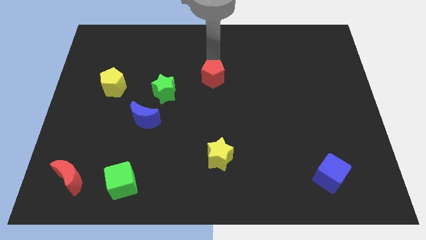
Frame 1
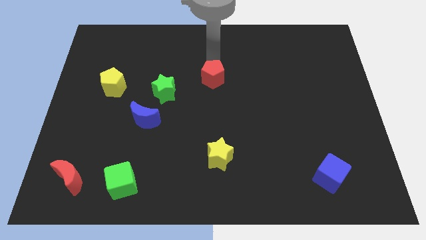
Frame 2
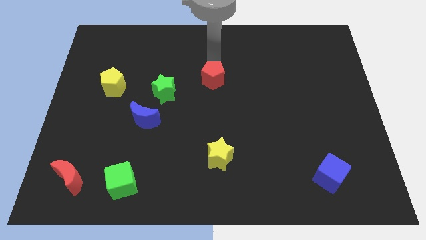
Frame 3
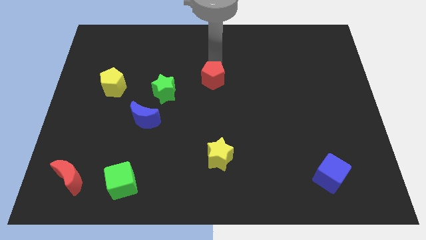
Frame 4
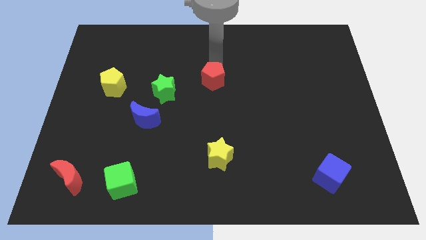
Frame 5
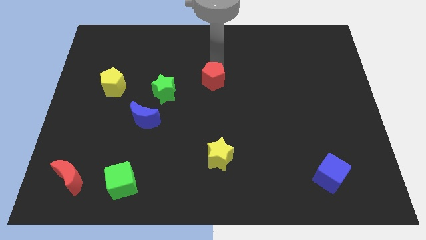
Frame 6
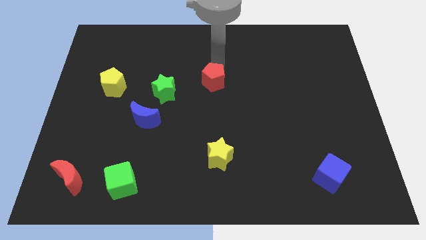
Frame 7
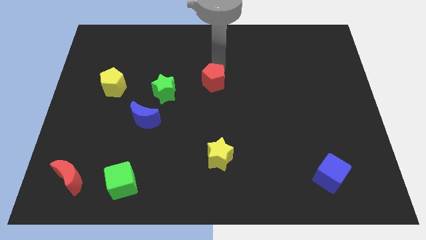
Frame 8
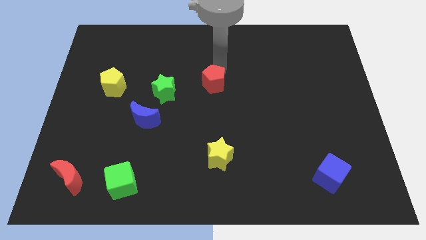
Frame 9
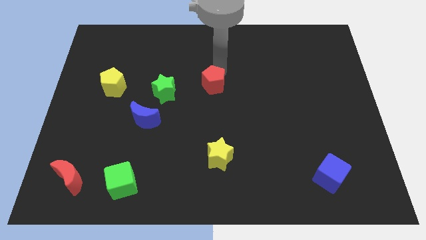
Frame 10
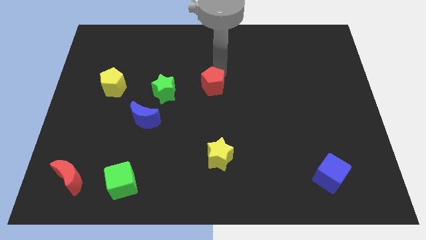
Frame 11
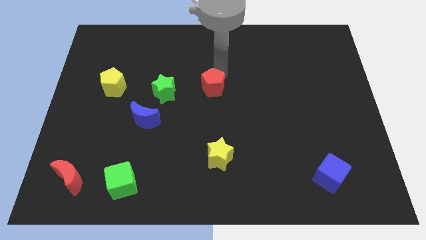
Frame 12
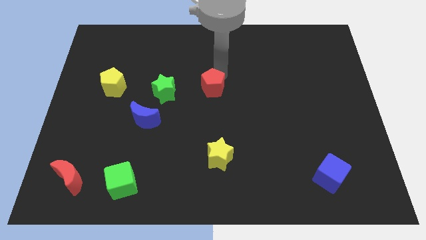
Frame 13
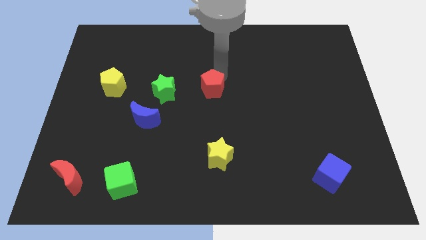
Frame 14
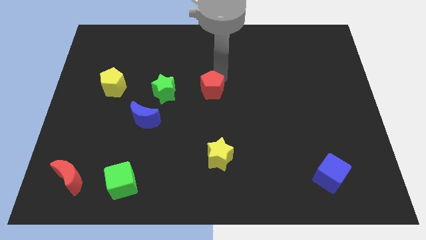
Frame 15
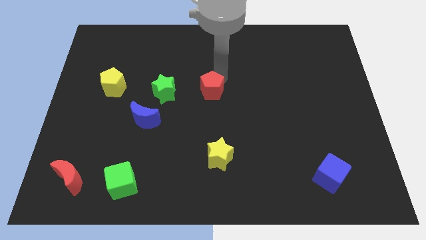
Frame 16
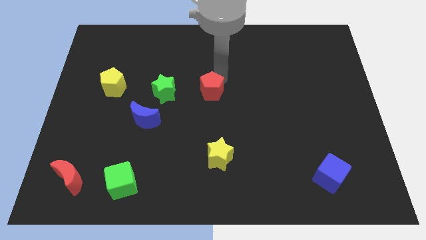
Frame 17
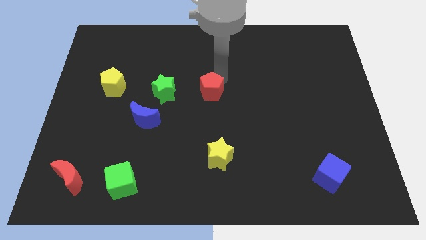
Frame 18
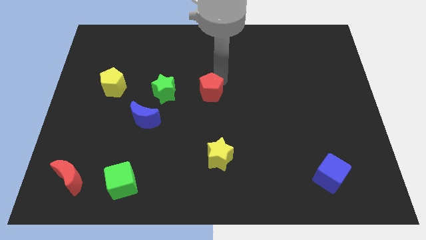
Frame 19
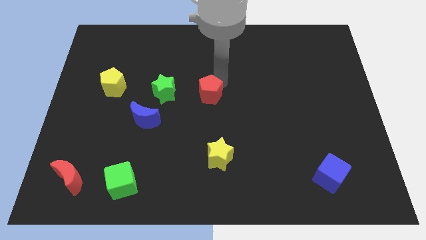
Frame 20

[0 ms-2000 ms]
place the red pentagon parallel right to the green star

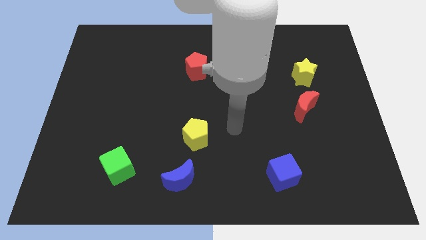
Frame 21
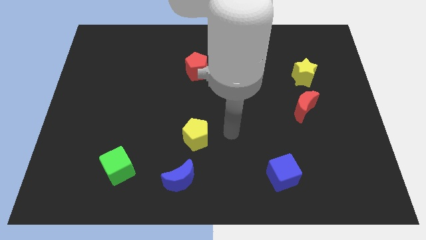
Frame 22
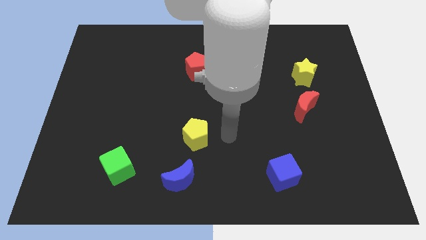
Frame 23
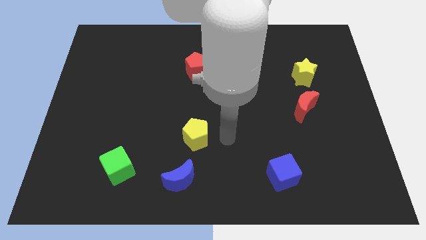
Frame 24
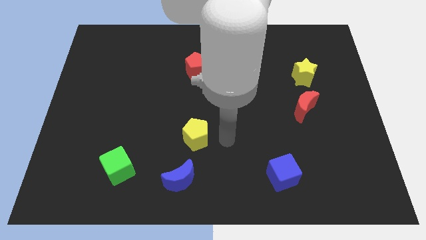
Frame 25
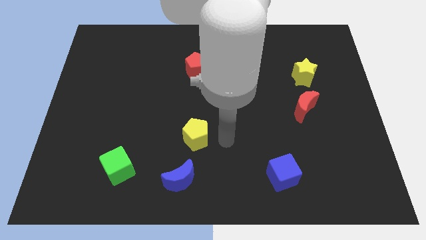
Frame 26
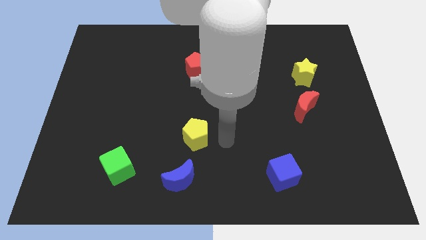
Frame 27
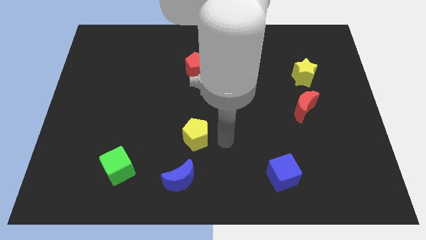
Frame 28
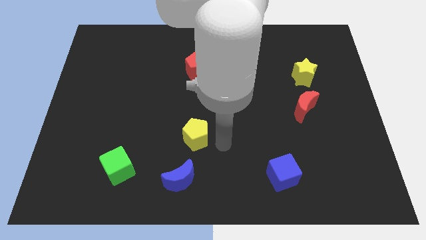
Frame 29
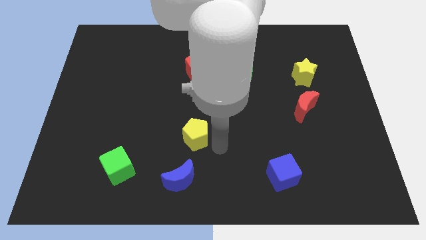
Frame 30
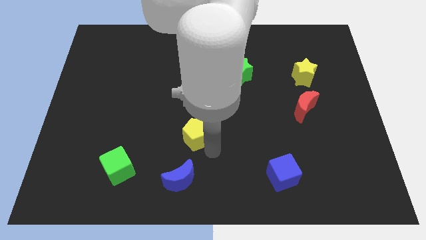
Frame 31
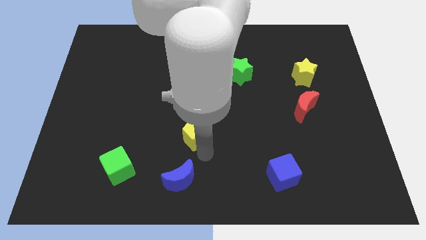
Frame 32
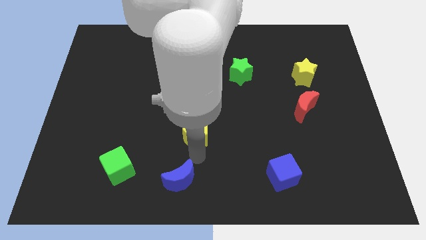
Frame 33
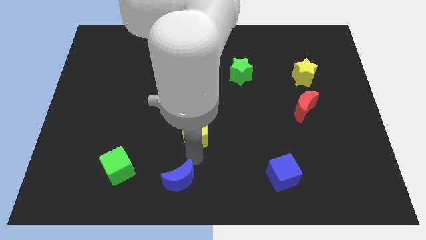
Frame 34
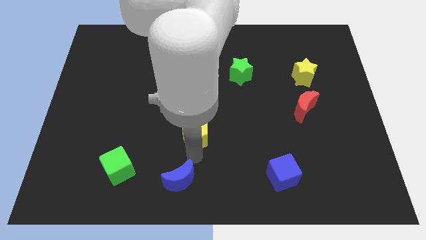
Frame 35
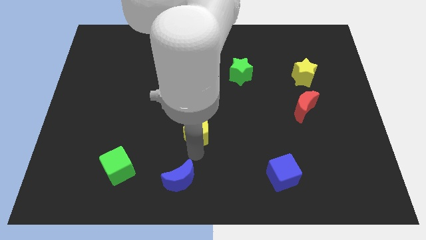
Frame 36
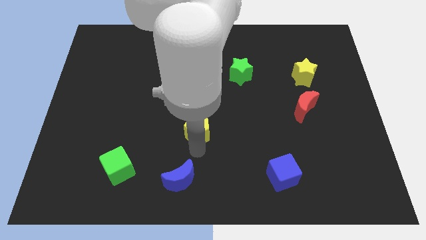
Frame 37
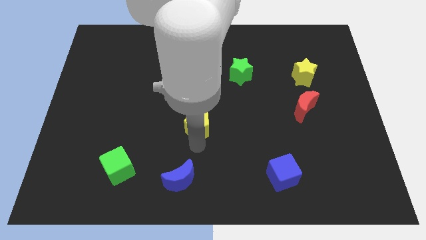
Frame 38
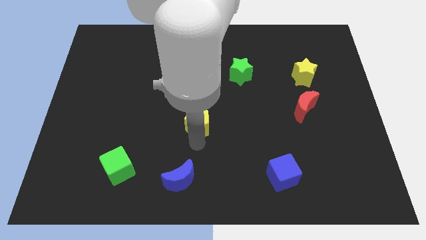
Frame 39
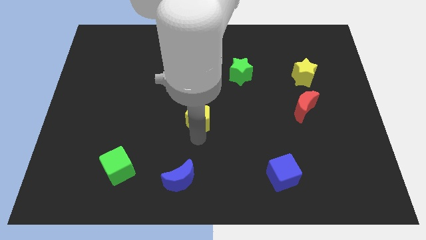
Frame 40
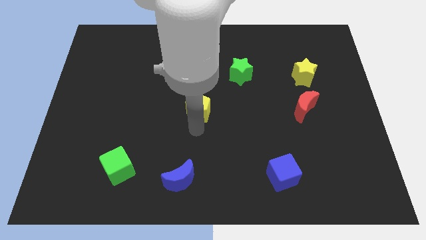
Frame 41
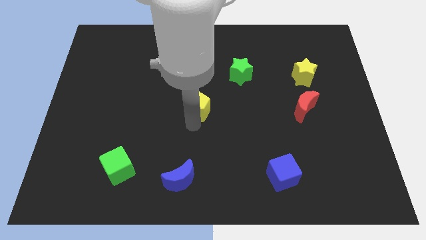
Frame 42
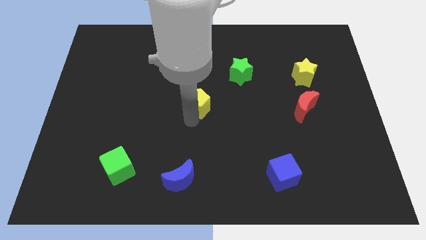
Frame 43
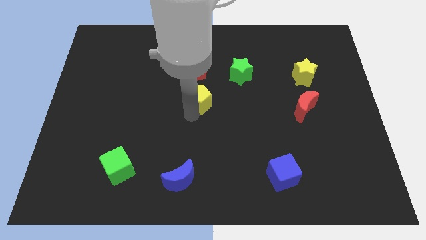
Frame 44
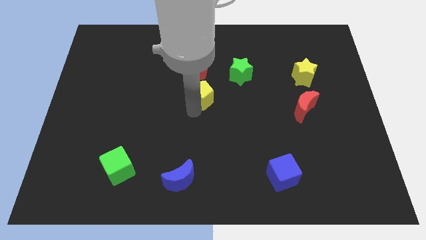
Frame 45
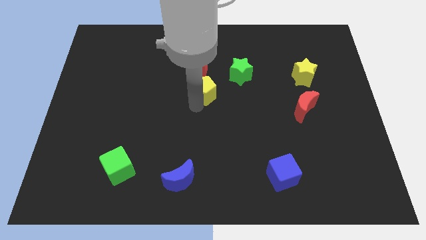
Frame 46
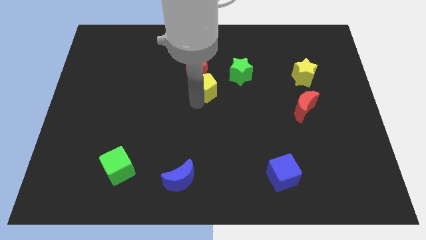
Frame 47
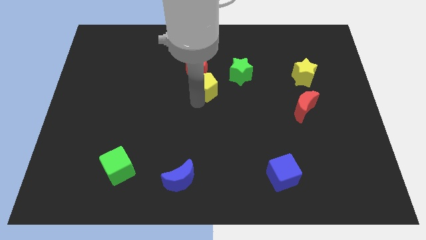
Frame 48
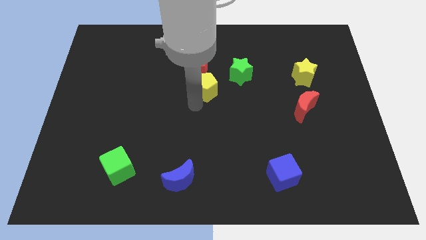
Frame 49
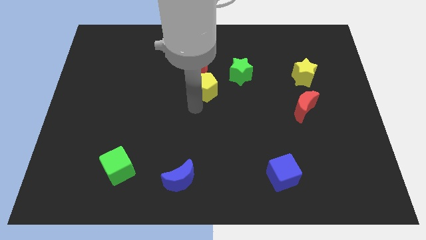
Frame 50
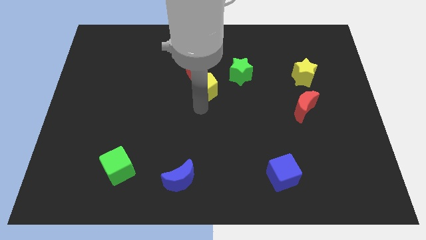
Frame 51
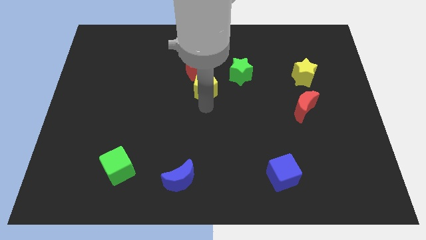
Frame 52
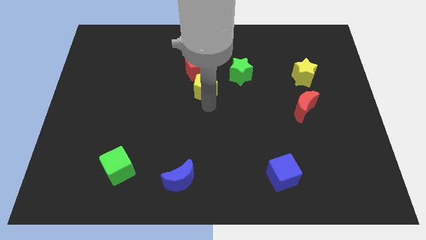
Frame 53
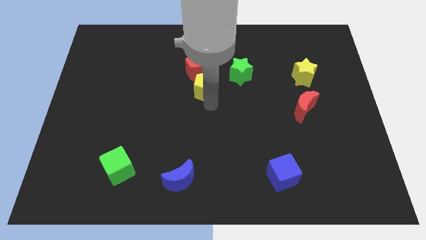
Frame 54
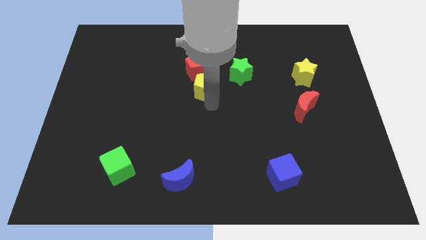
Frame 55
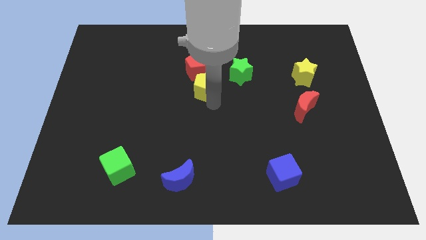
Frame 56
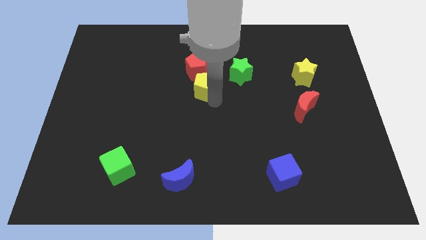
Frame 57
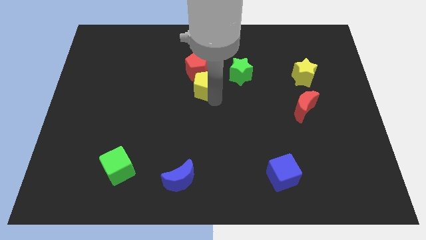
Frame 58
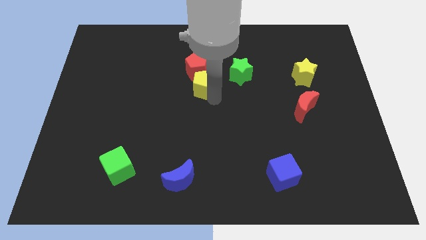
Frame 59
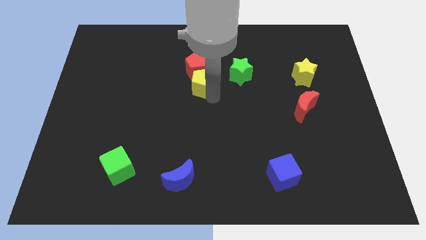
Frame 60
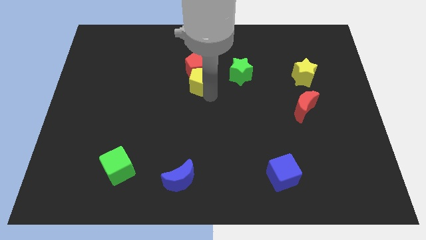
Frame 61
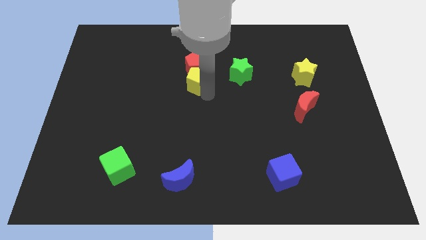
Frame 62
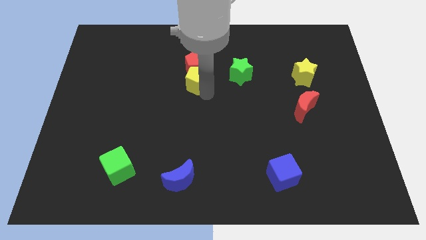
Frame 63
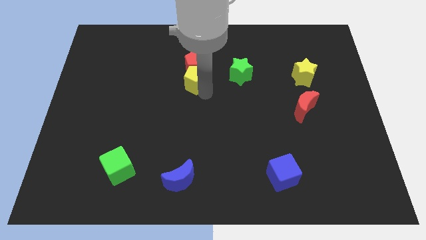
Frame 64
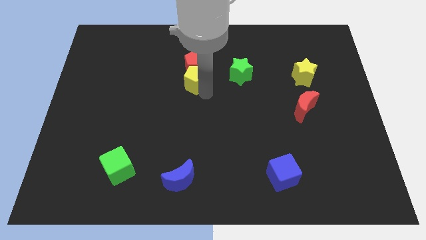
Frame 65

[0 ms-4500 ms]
move the yellow pentagon close to the red pentagon

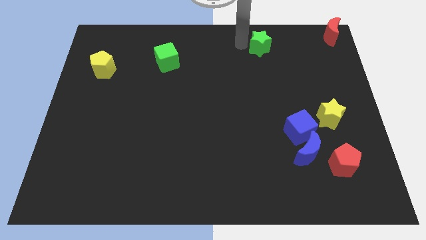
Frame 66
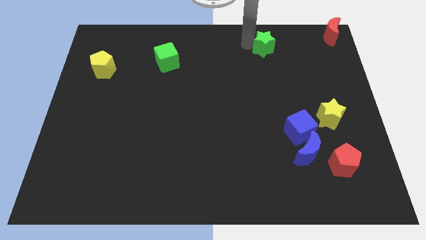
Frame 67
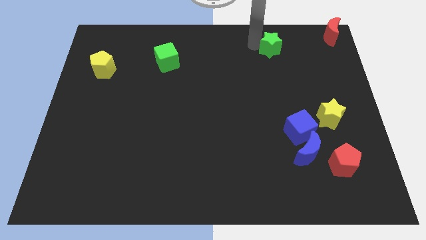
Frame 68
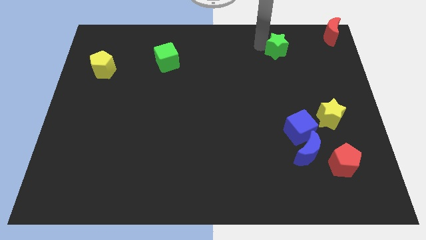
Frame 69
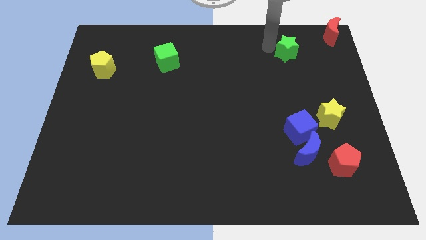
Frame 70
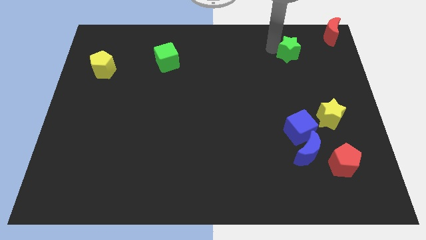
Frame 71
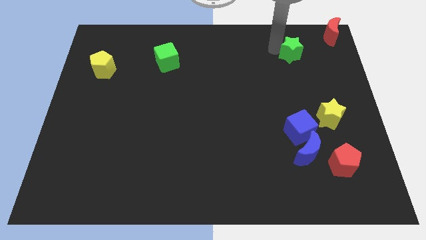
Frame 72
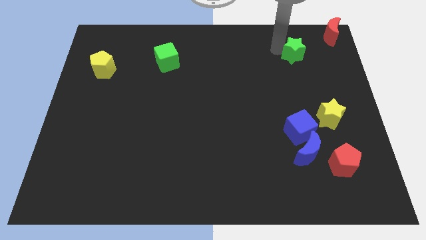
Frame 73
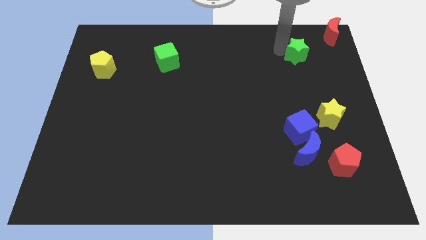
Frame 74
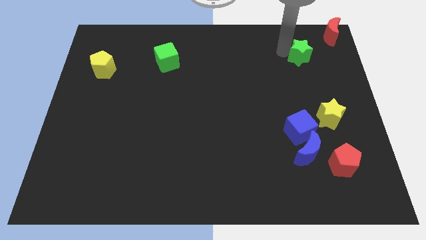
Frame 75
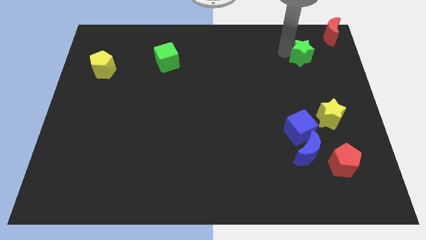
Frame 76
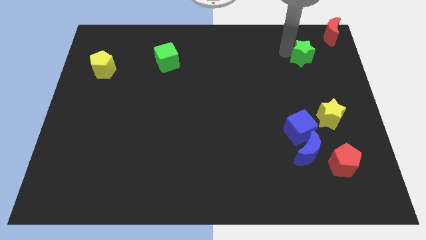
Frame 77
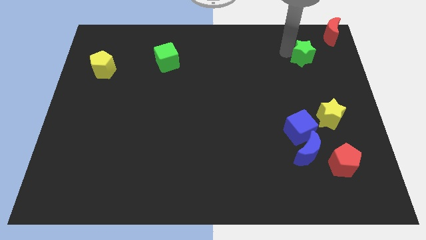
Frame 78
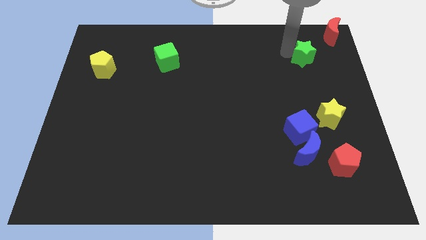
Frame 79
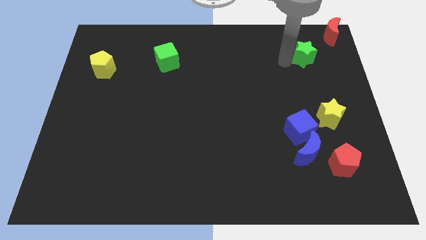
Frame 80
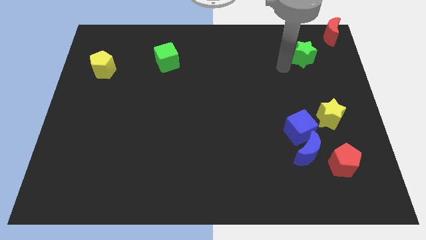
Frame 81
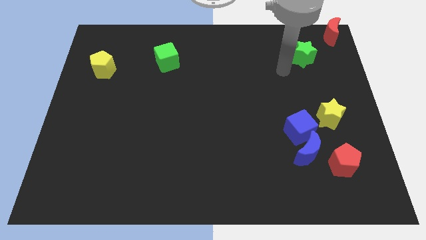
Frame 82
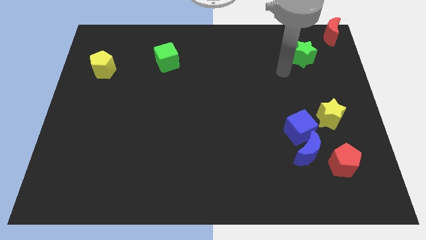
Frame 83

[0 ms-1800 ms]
move the green star to the top right corner of the board

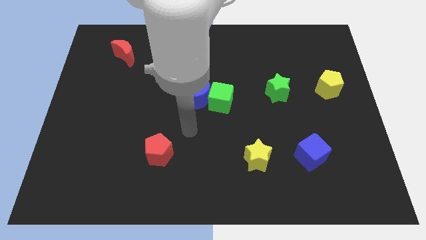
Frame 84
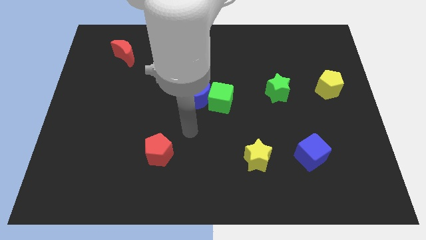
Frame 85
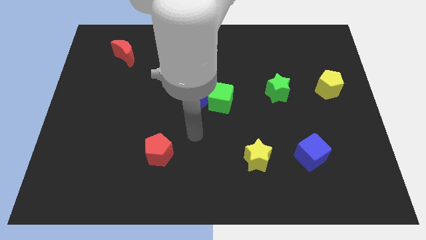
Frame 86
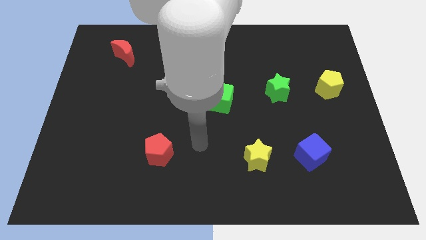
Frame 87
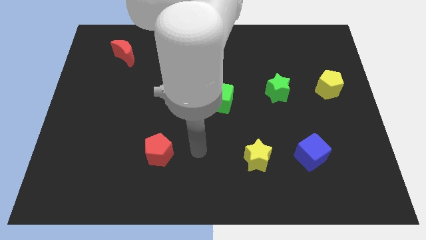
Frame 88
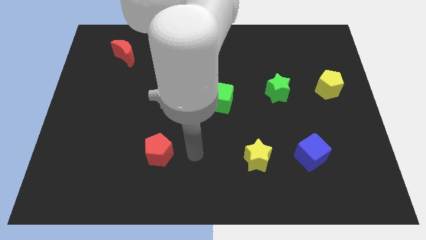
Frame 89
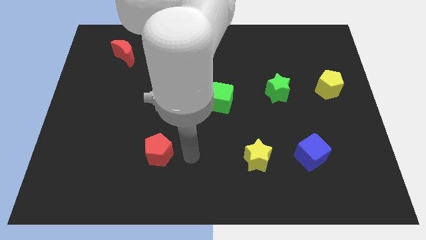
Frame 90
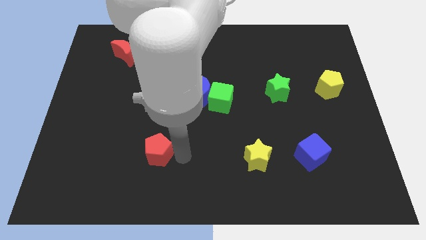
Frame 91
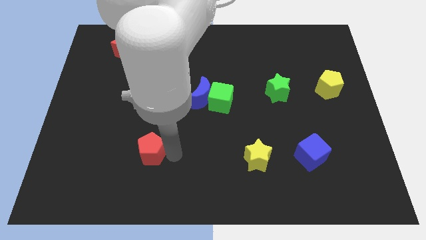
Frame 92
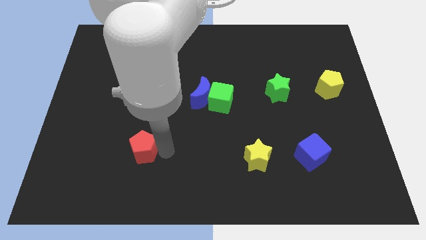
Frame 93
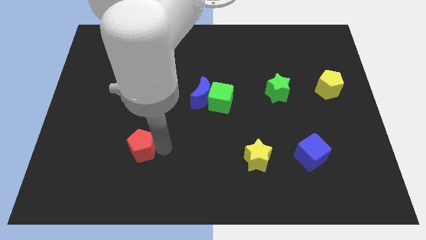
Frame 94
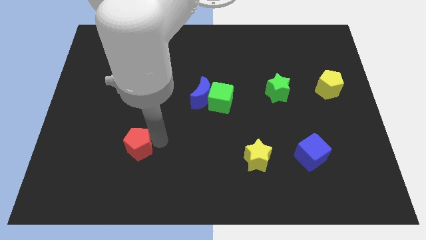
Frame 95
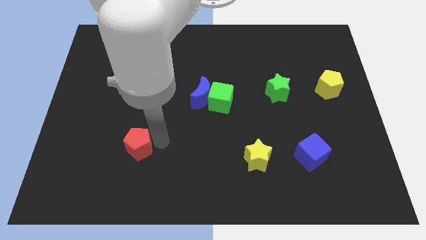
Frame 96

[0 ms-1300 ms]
push the red pentagon towards the left side of the board
